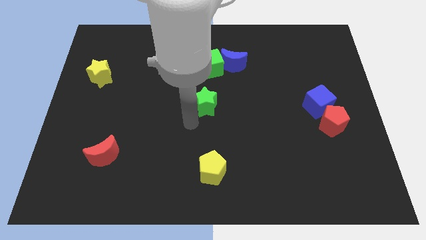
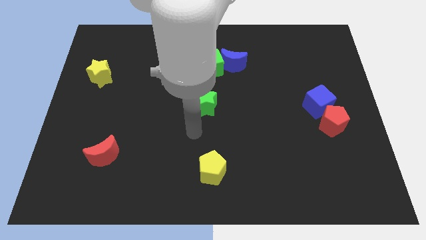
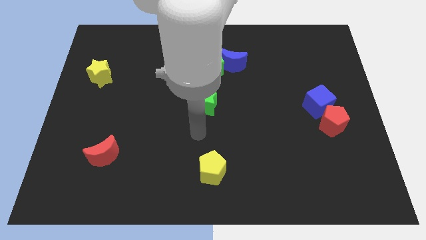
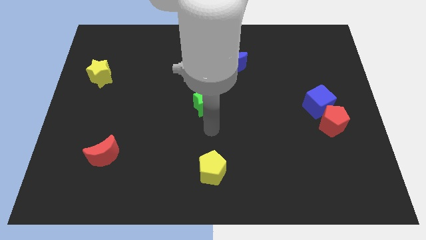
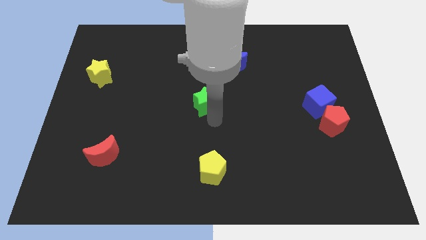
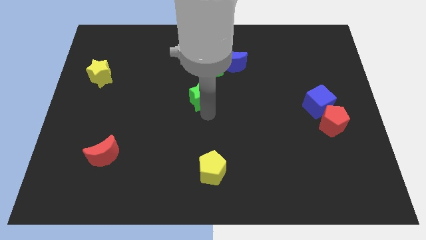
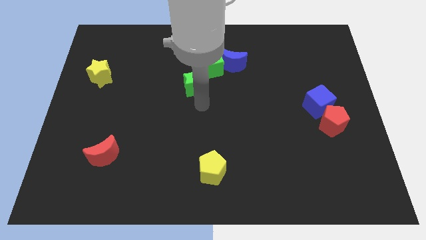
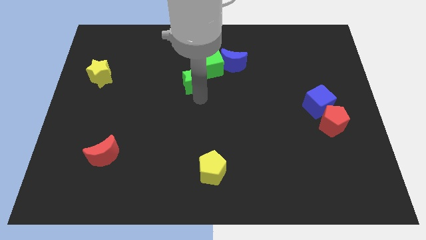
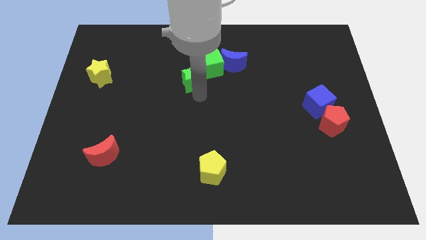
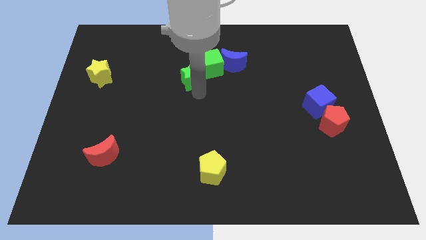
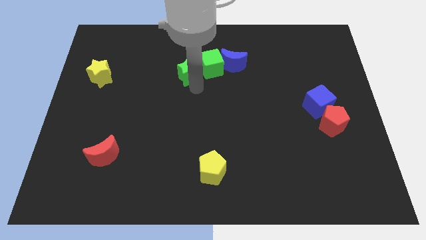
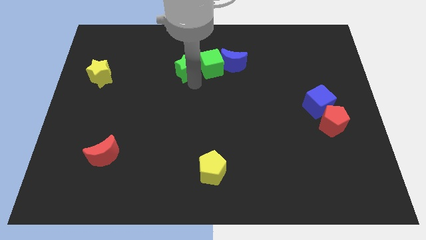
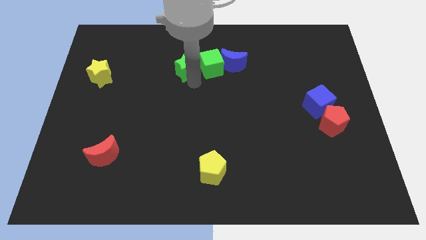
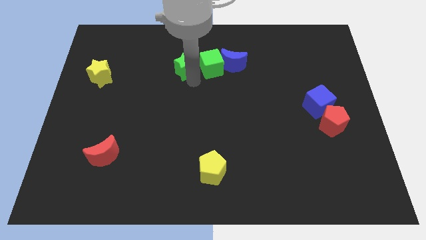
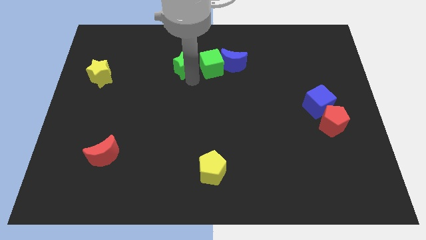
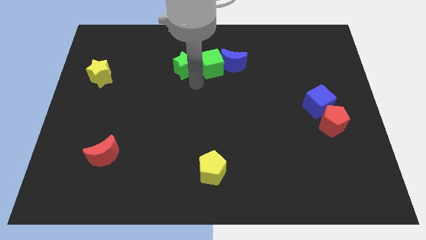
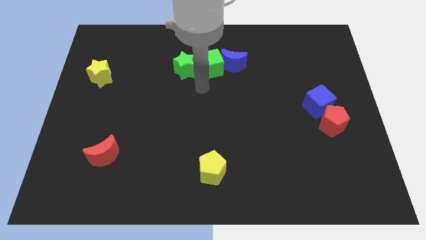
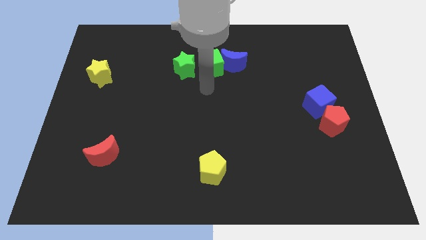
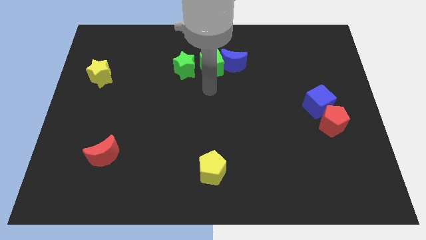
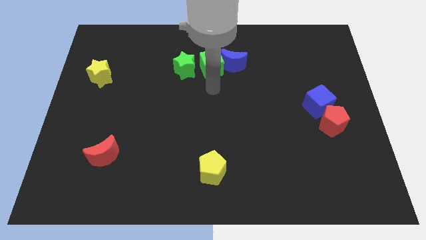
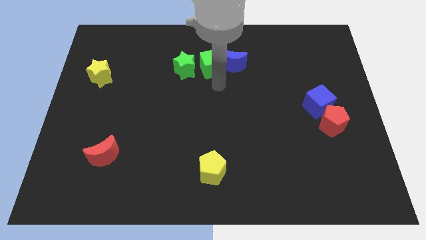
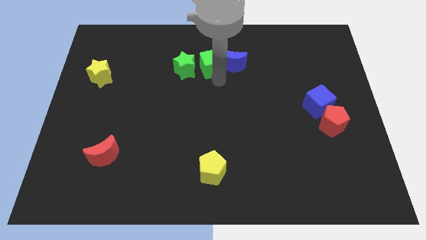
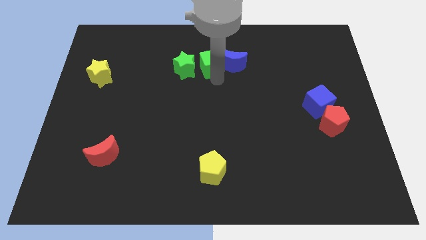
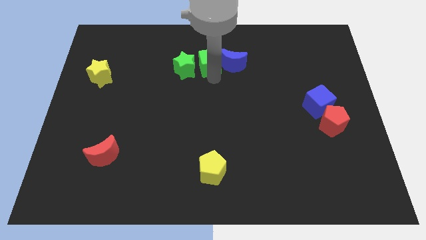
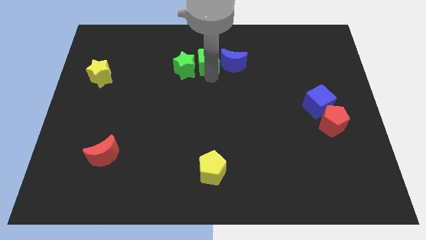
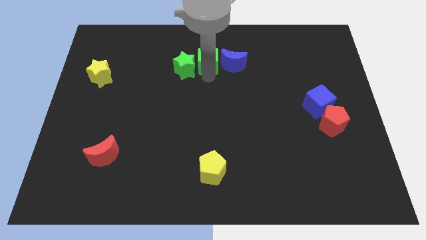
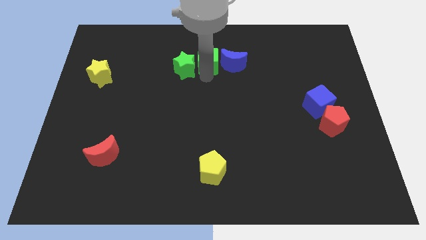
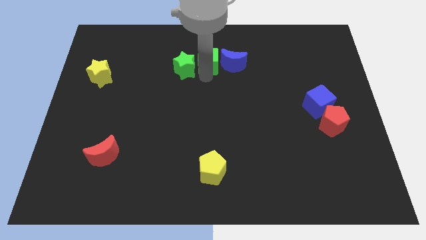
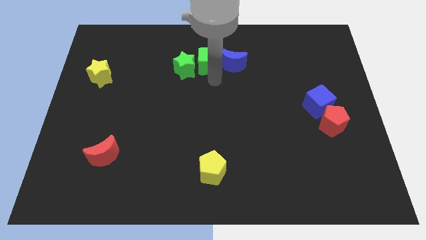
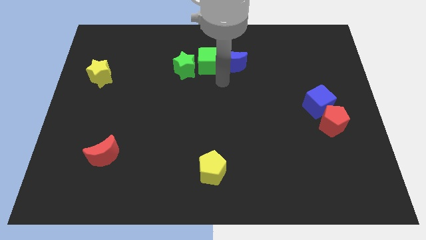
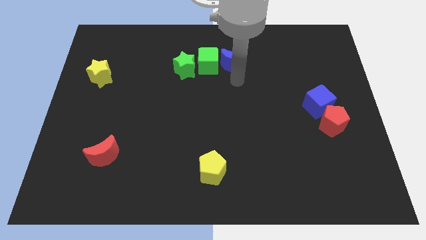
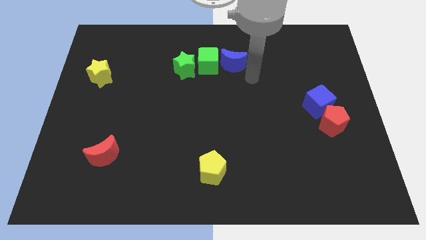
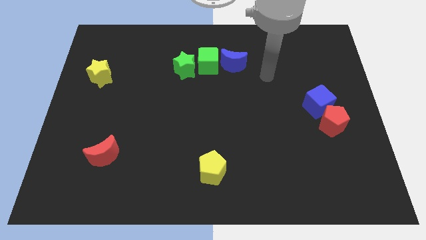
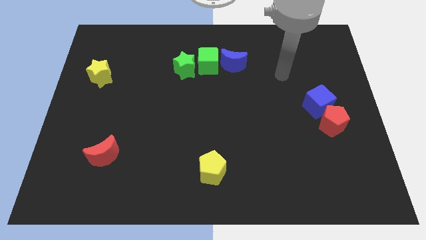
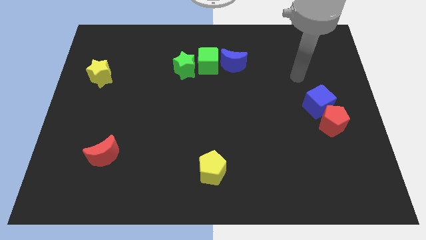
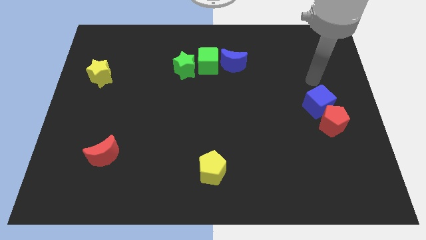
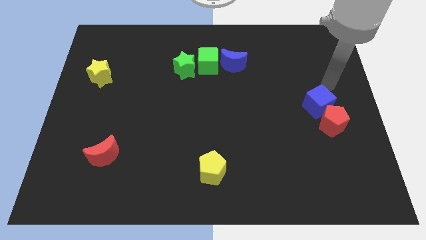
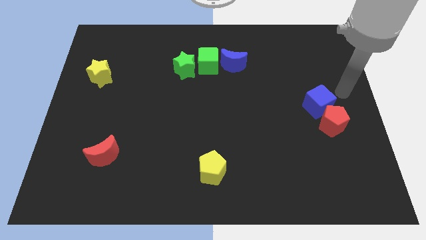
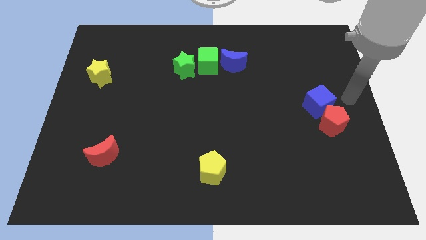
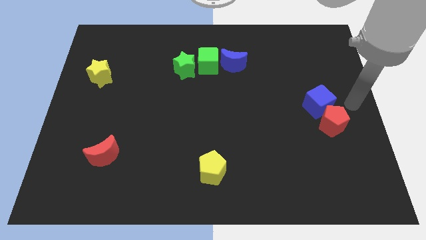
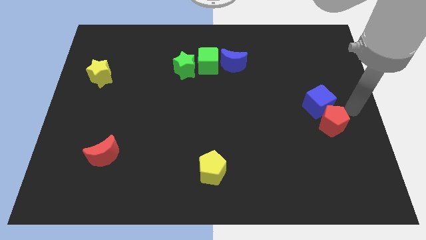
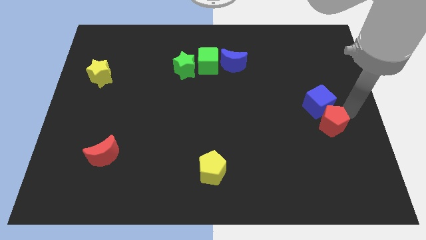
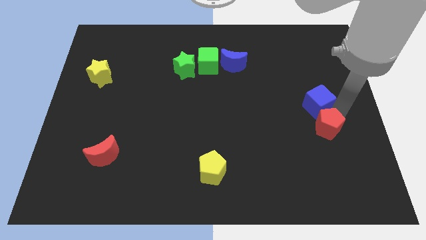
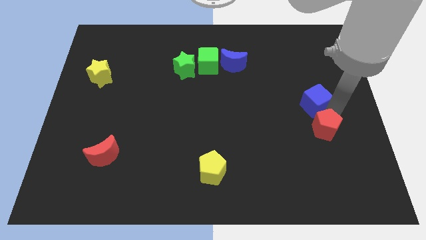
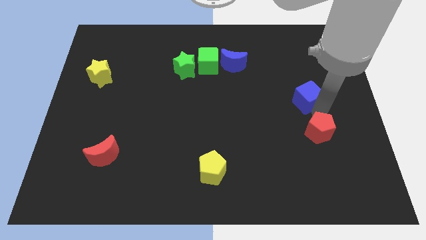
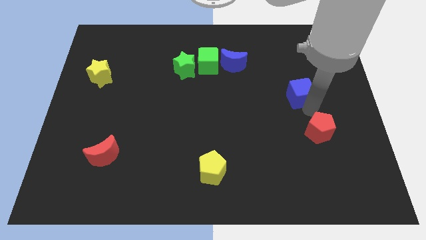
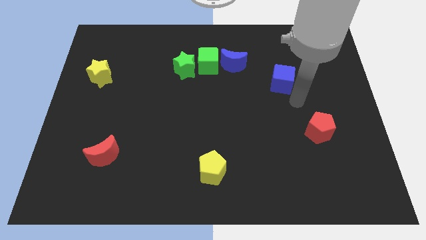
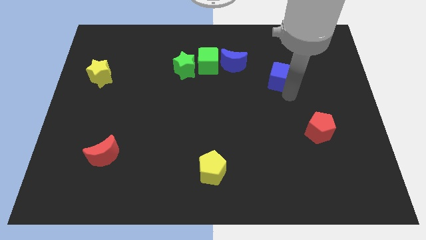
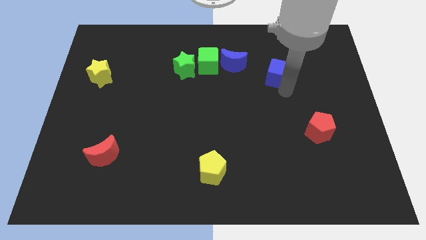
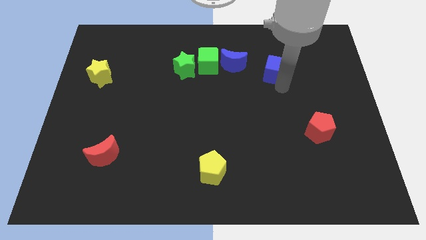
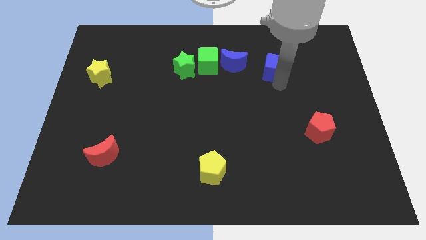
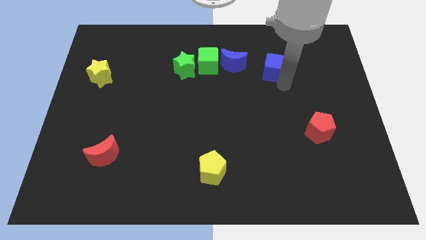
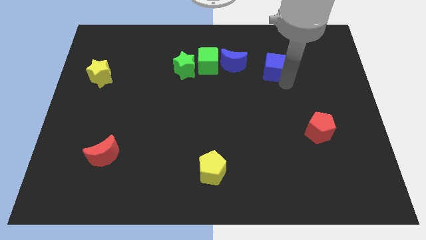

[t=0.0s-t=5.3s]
move the blue cube towards the top side

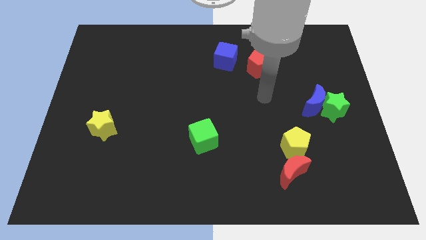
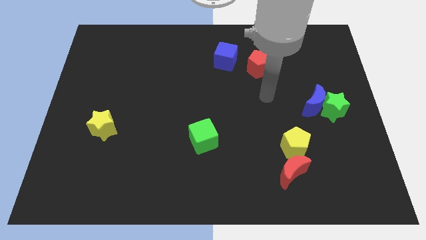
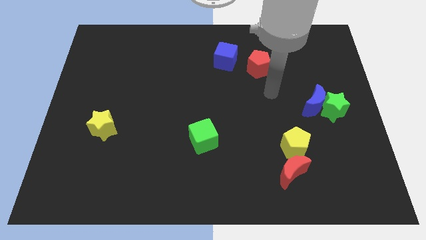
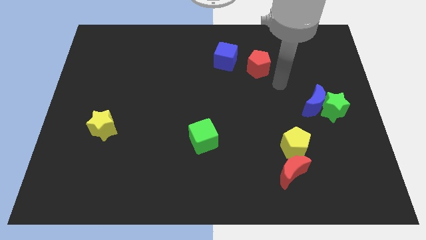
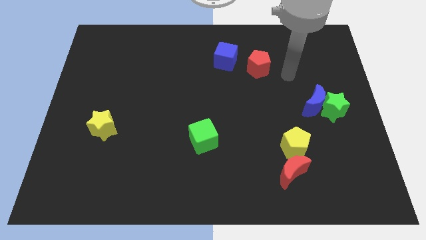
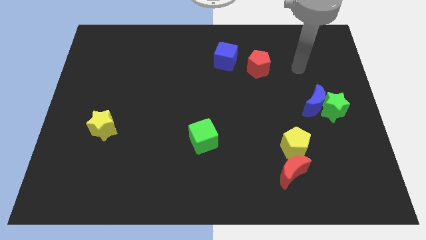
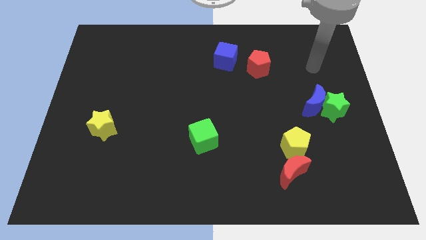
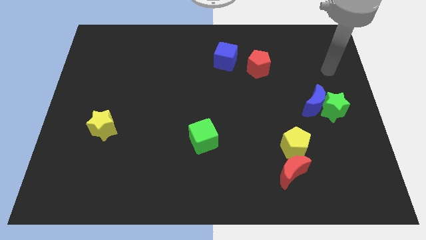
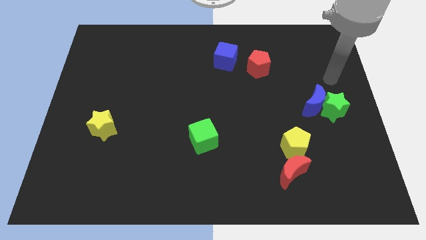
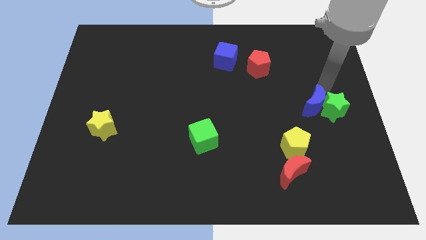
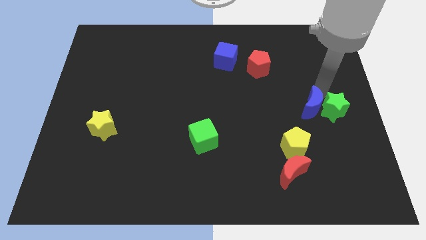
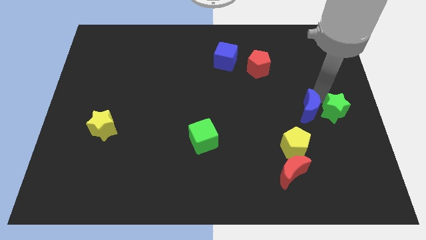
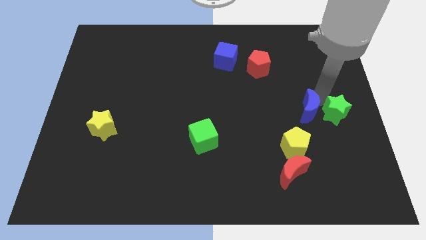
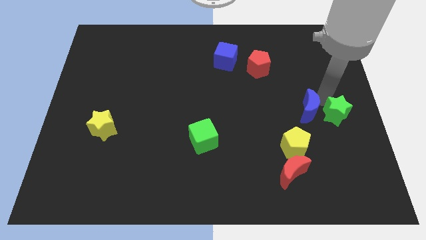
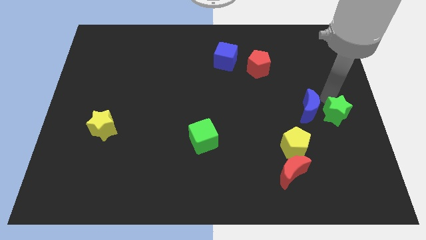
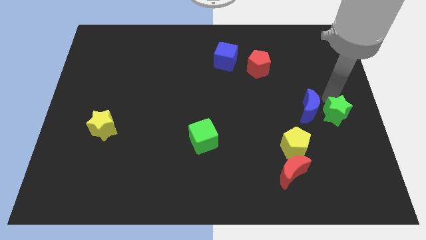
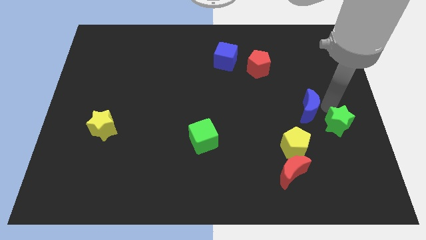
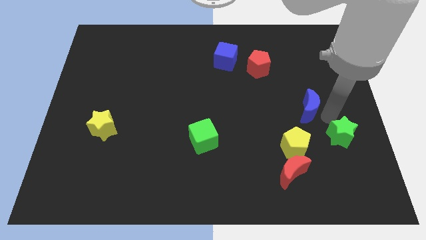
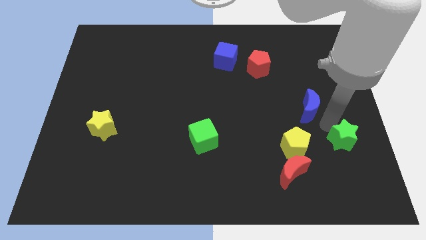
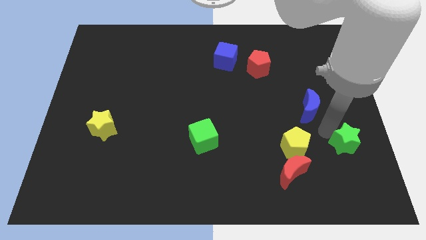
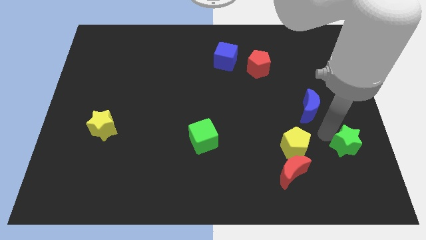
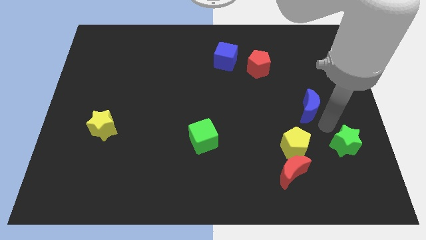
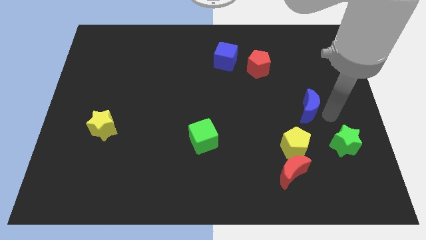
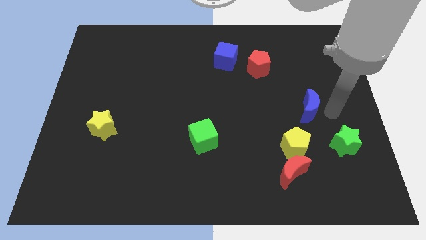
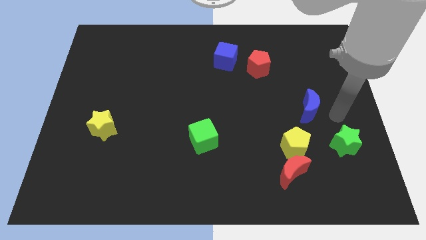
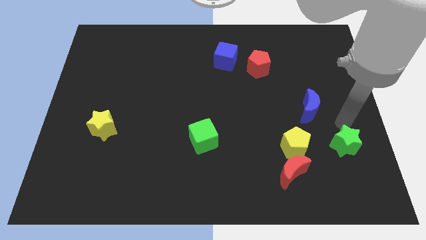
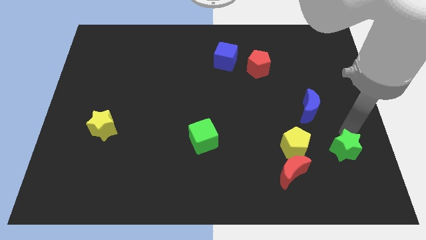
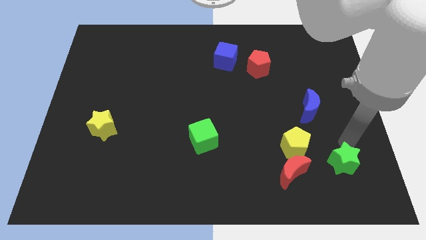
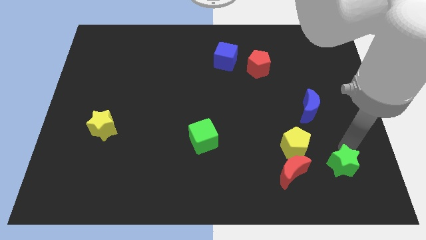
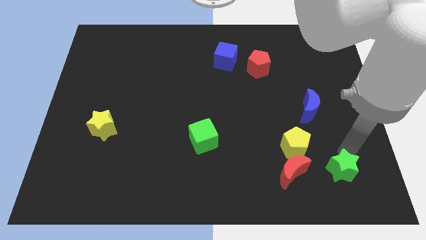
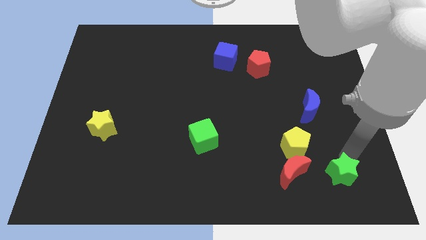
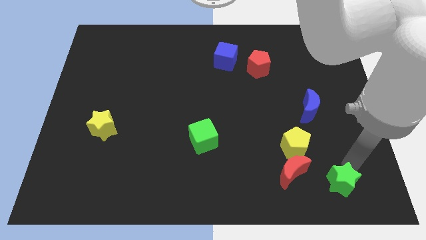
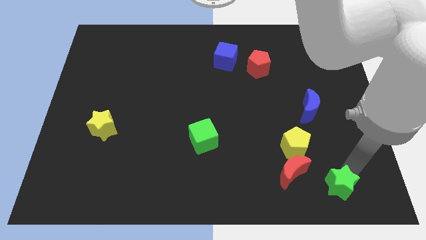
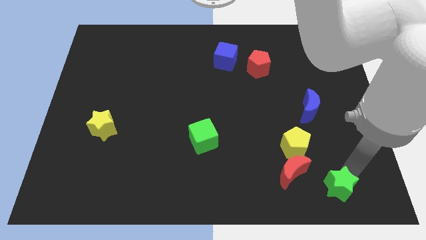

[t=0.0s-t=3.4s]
push green star to the bottom

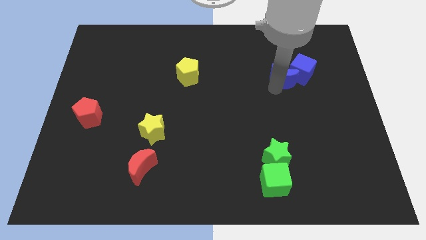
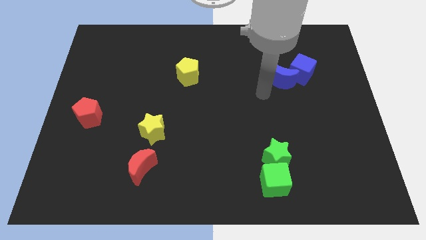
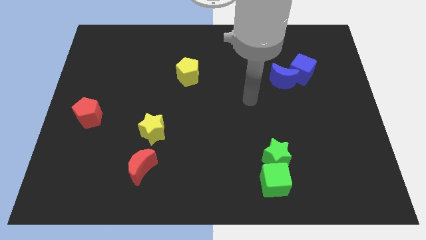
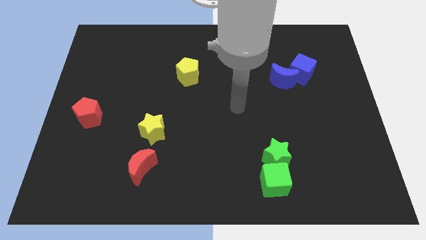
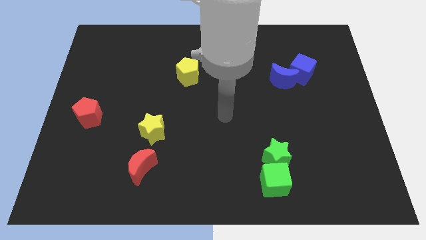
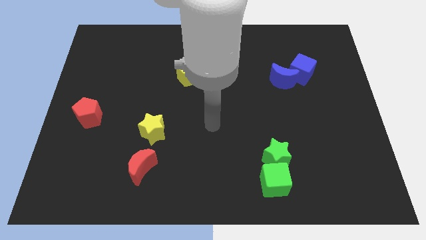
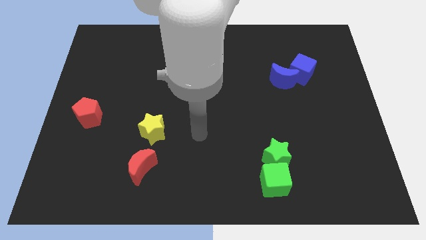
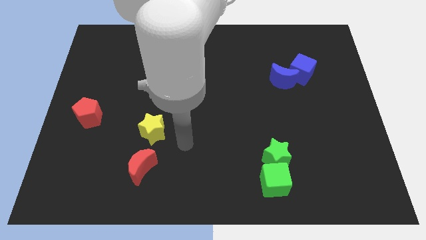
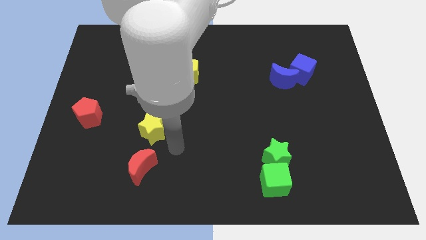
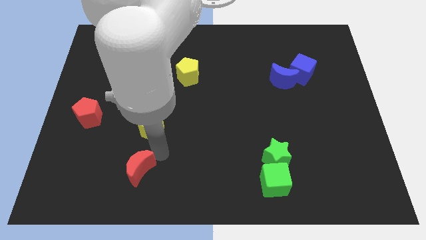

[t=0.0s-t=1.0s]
move your arm to the top of red moon
